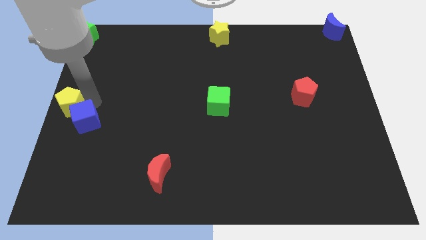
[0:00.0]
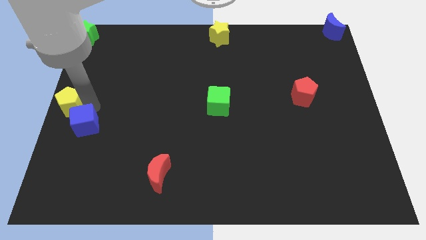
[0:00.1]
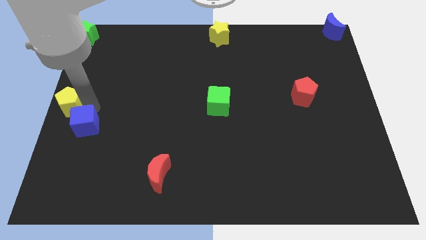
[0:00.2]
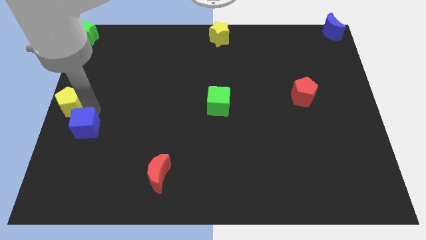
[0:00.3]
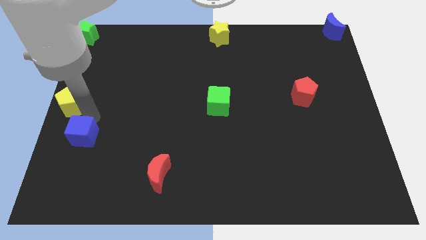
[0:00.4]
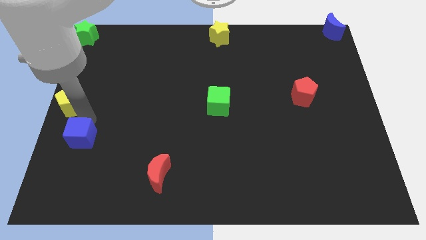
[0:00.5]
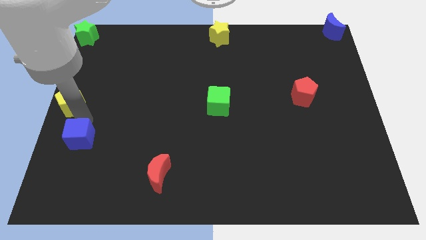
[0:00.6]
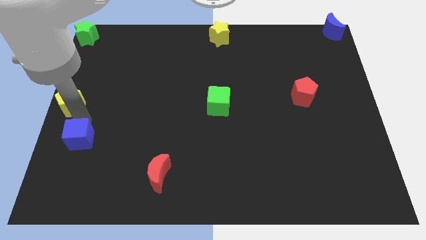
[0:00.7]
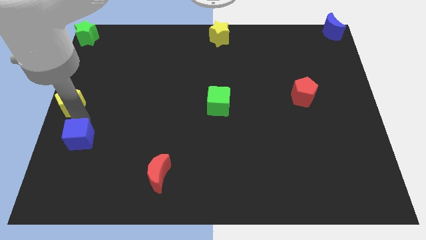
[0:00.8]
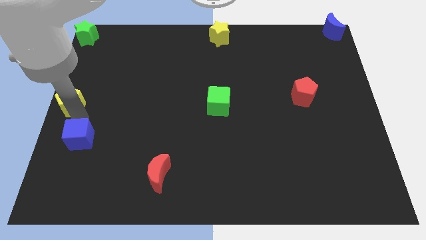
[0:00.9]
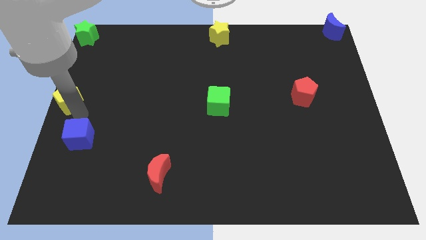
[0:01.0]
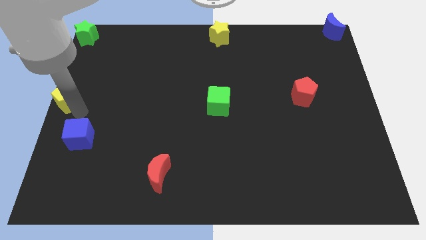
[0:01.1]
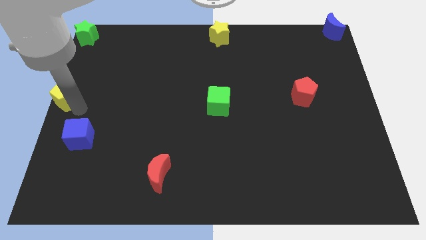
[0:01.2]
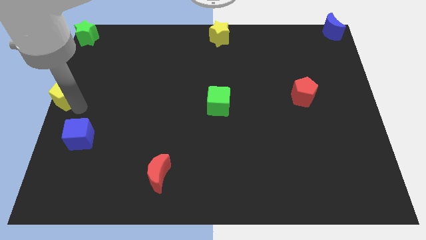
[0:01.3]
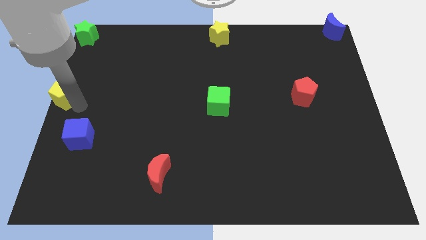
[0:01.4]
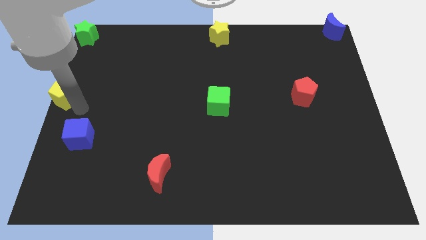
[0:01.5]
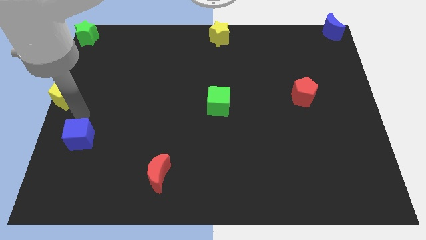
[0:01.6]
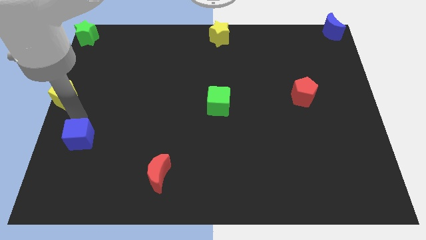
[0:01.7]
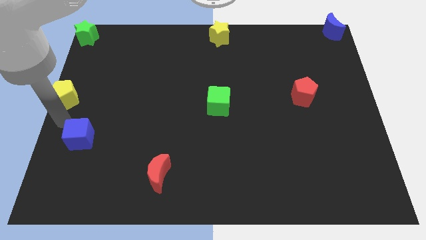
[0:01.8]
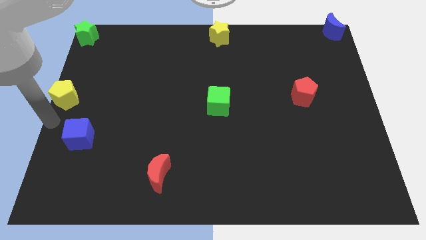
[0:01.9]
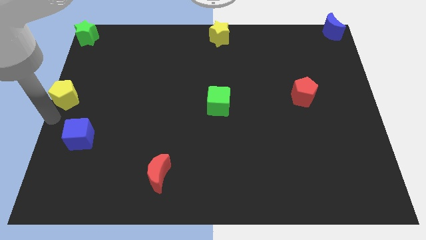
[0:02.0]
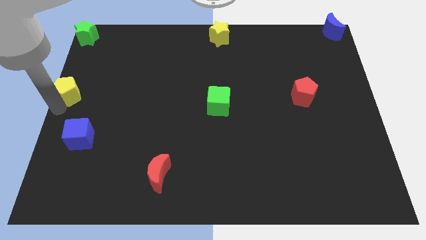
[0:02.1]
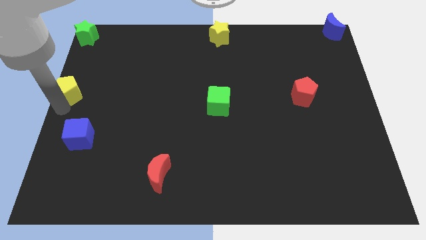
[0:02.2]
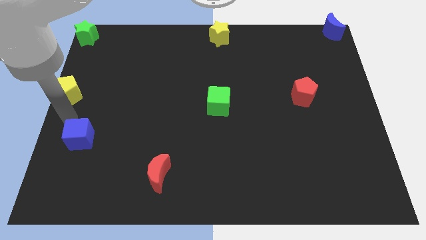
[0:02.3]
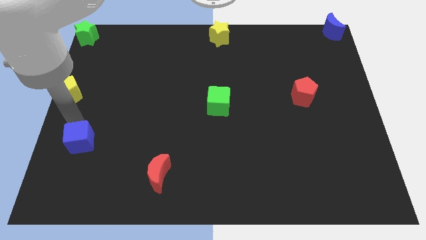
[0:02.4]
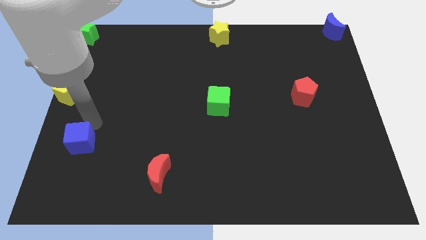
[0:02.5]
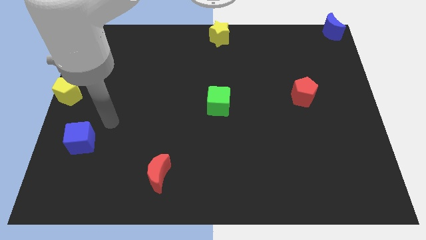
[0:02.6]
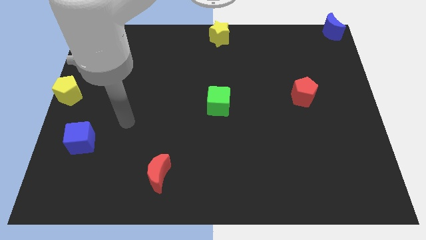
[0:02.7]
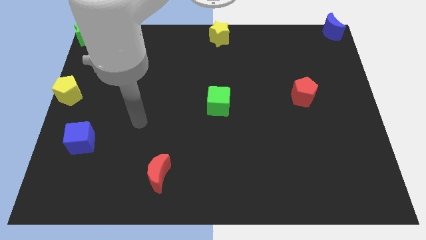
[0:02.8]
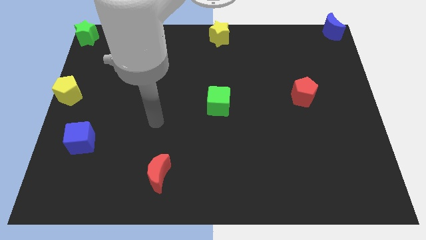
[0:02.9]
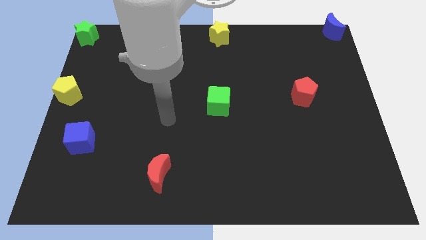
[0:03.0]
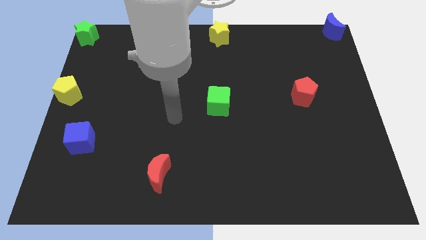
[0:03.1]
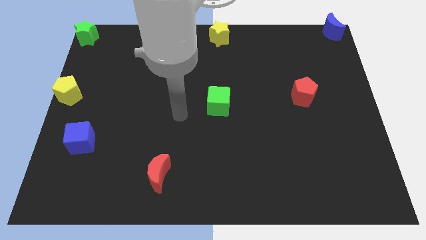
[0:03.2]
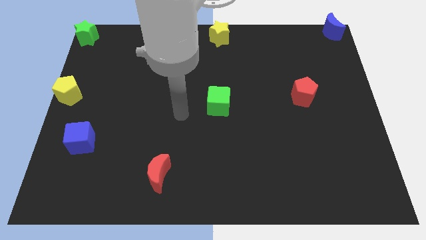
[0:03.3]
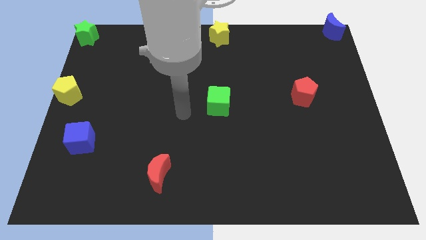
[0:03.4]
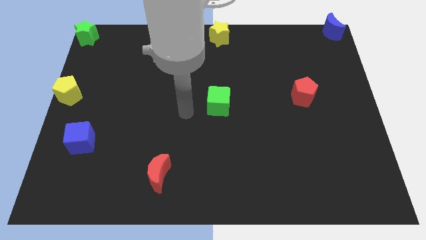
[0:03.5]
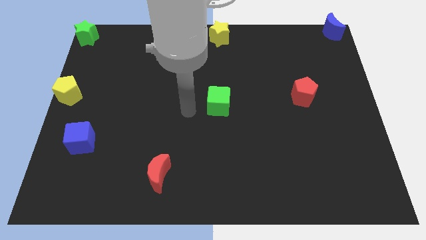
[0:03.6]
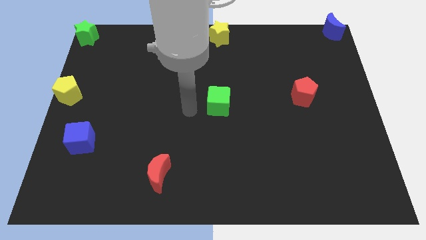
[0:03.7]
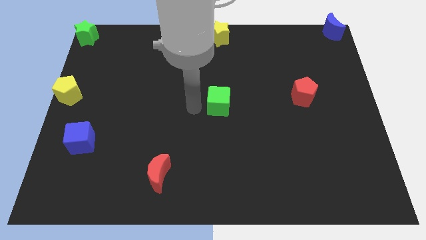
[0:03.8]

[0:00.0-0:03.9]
place the yellow pentagon at the center left of the board

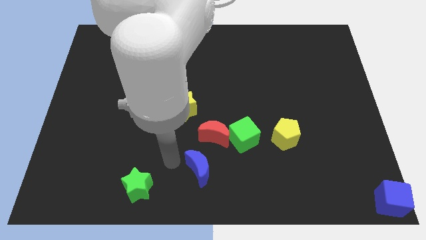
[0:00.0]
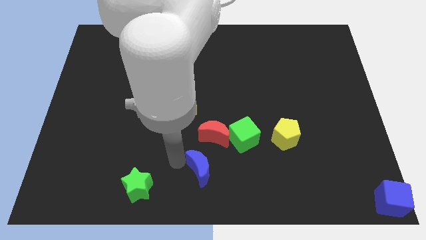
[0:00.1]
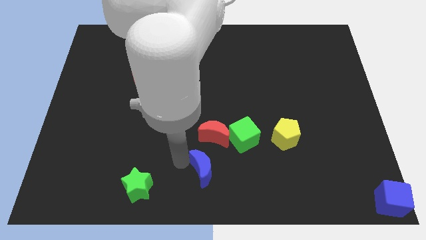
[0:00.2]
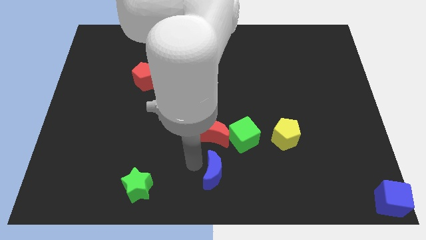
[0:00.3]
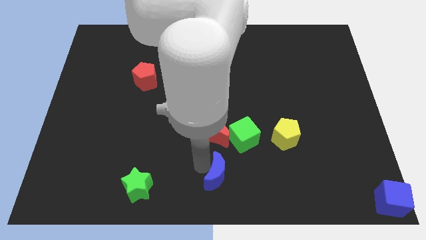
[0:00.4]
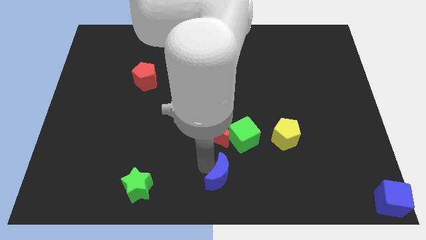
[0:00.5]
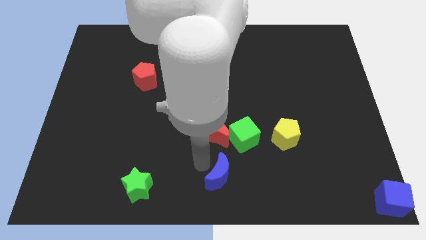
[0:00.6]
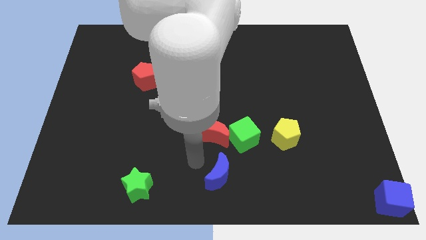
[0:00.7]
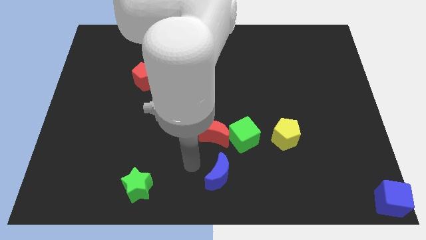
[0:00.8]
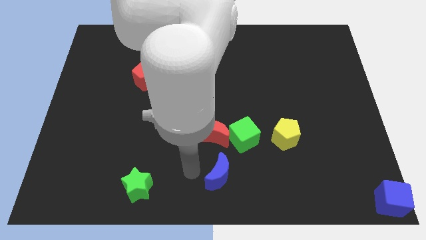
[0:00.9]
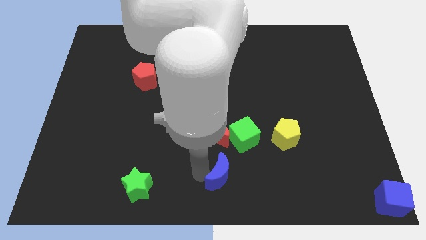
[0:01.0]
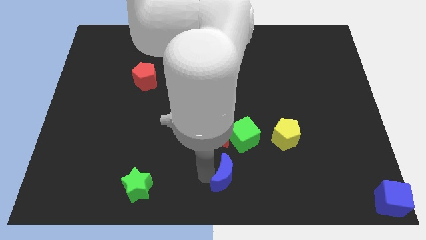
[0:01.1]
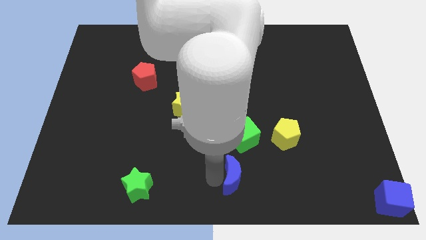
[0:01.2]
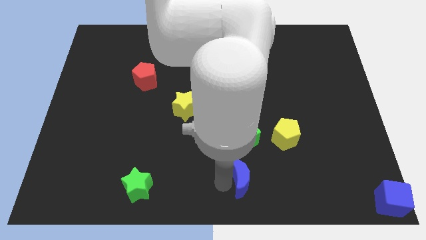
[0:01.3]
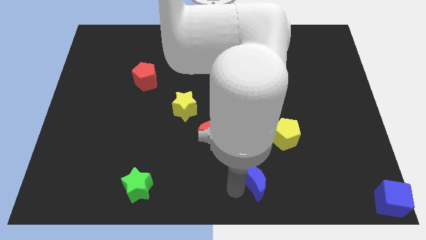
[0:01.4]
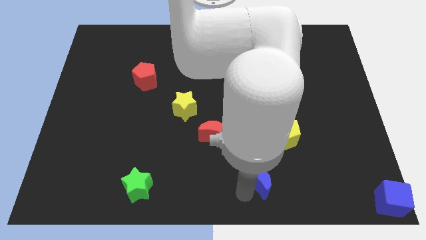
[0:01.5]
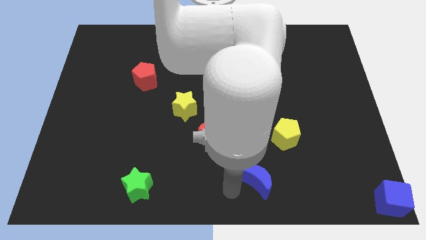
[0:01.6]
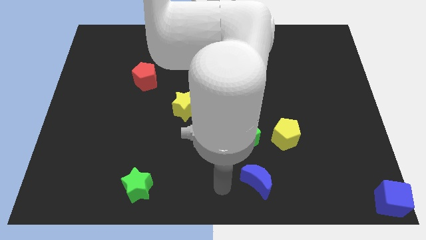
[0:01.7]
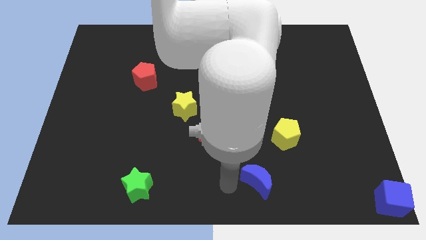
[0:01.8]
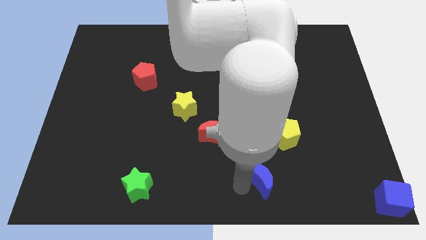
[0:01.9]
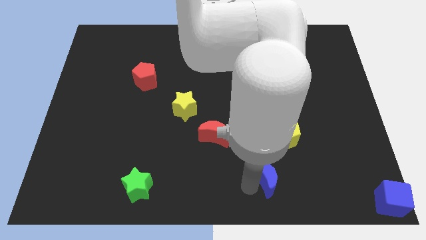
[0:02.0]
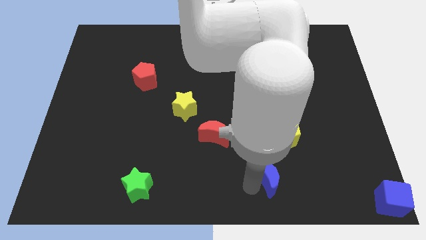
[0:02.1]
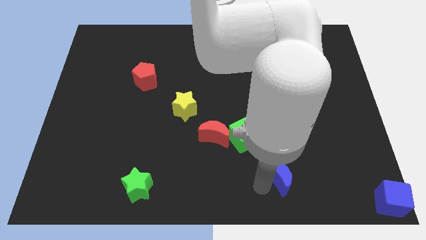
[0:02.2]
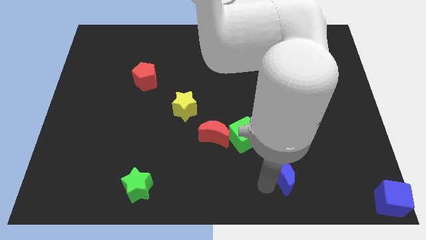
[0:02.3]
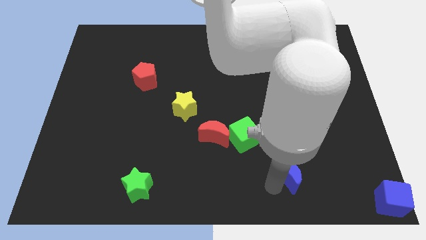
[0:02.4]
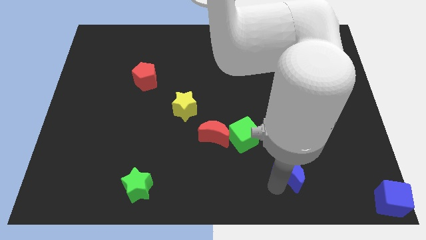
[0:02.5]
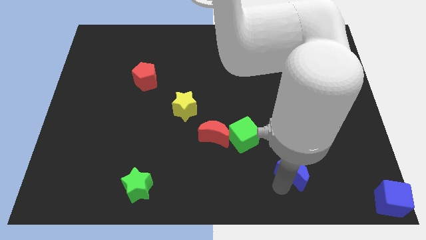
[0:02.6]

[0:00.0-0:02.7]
push the blue crescent to the bottom of the yellow pentagon

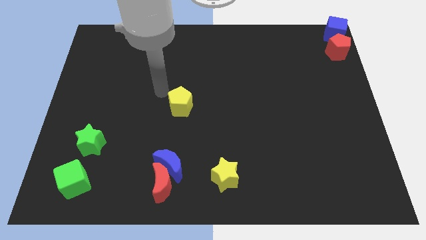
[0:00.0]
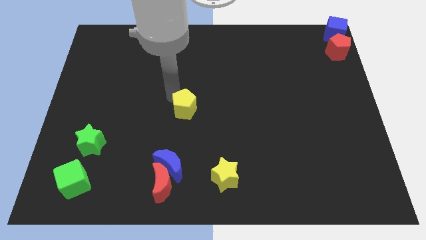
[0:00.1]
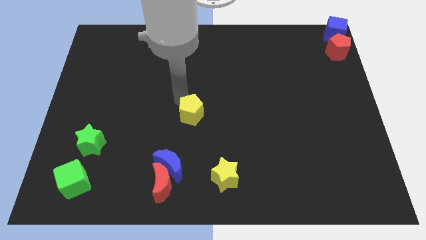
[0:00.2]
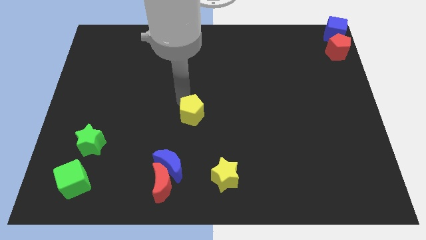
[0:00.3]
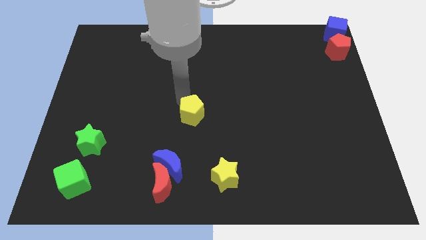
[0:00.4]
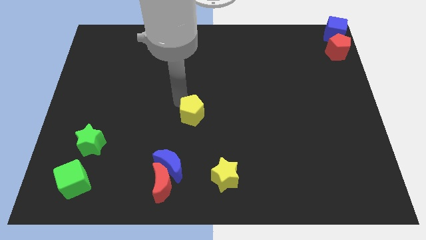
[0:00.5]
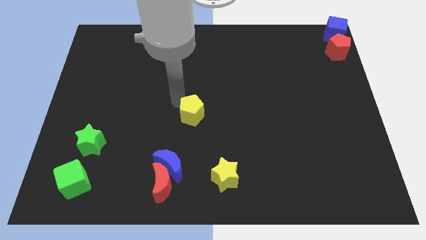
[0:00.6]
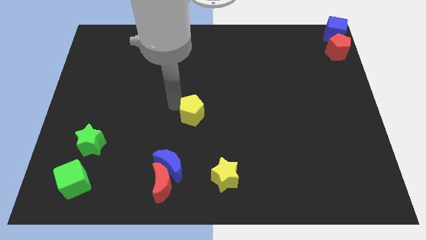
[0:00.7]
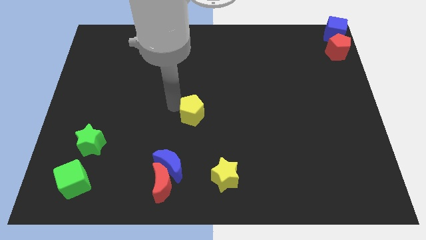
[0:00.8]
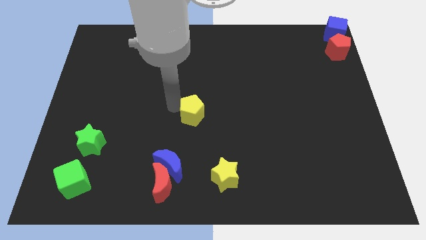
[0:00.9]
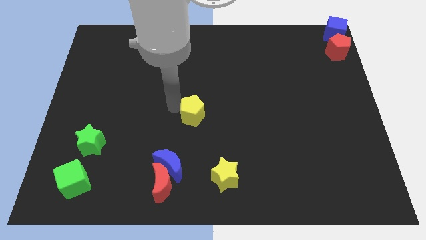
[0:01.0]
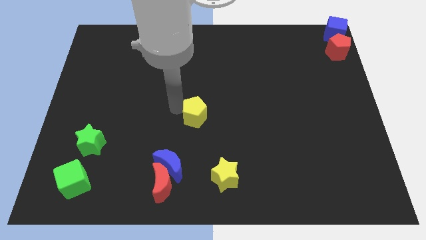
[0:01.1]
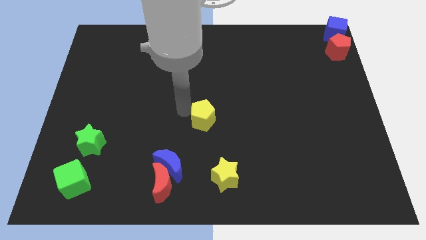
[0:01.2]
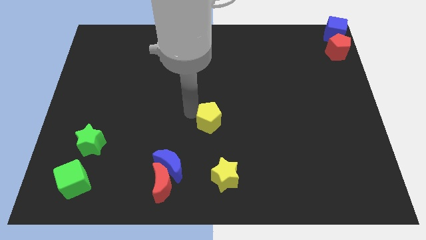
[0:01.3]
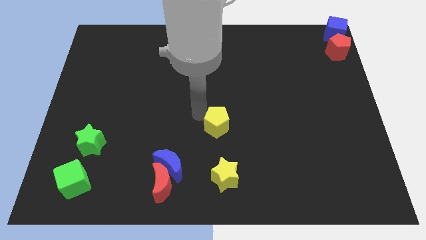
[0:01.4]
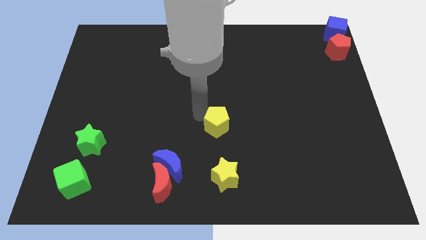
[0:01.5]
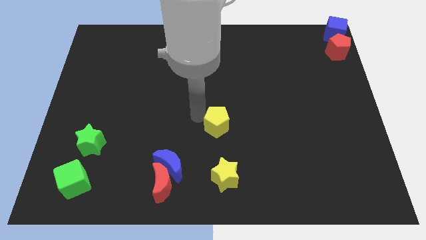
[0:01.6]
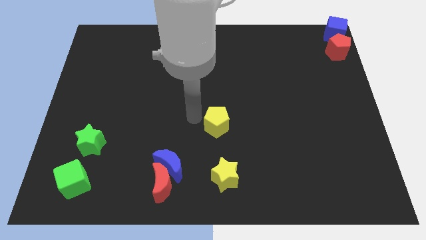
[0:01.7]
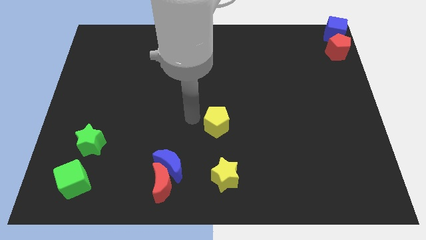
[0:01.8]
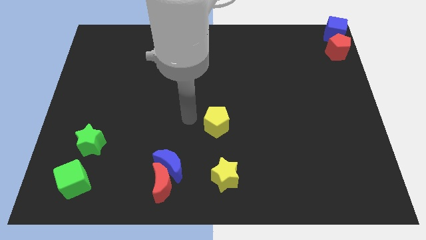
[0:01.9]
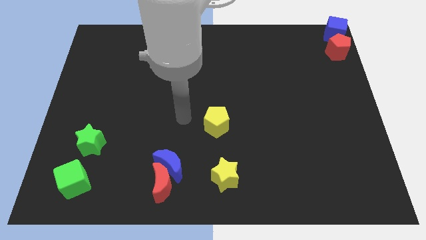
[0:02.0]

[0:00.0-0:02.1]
slide yellow pentagon on top left of yellow star

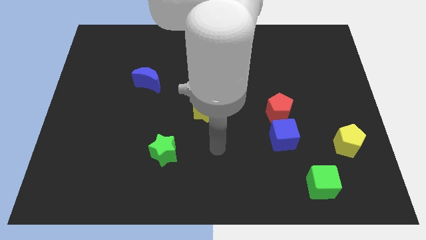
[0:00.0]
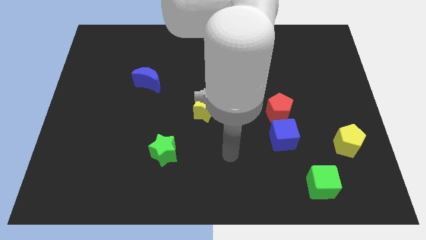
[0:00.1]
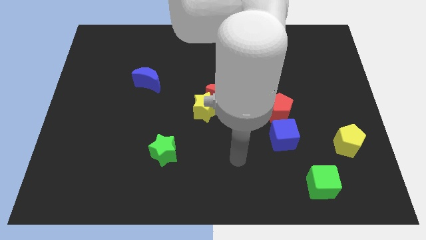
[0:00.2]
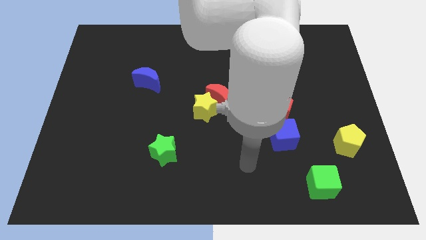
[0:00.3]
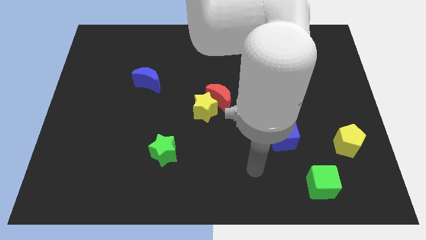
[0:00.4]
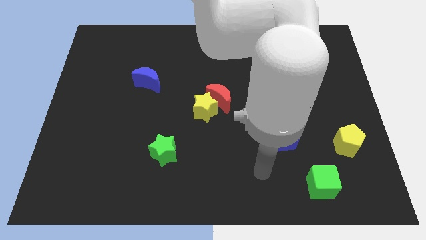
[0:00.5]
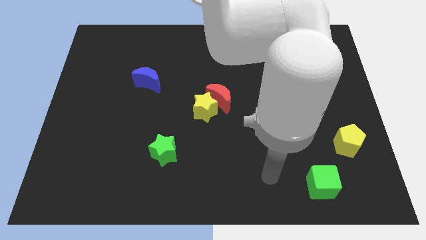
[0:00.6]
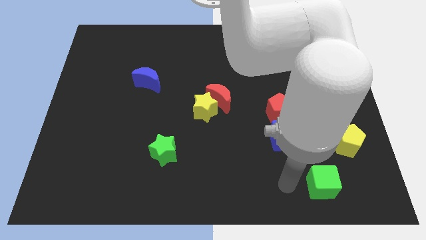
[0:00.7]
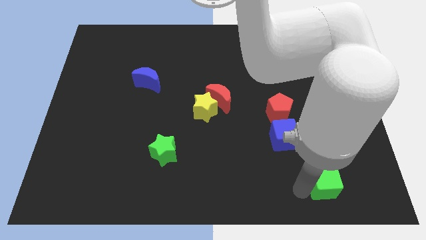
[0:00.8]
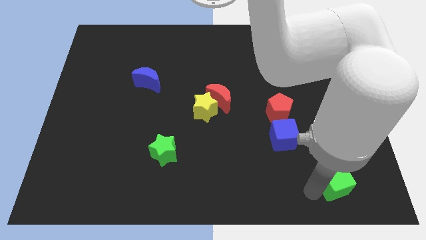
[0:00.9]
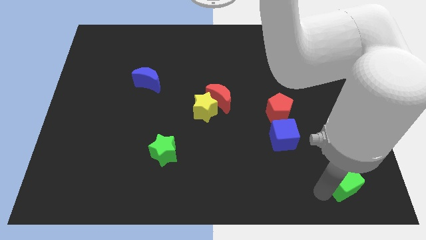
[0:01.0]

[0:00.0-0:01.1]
push the green cube towards the right side of the board
